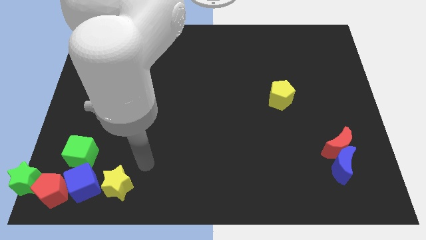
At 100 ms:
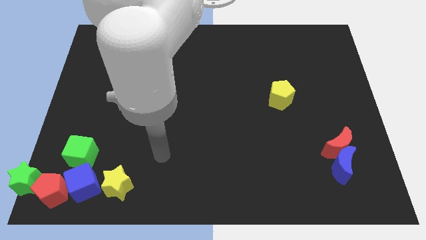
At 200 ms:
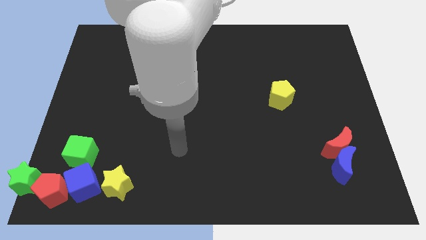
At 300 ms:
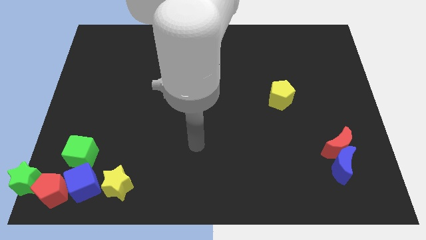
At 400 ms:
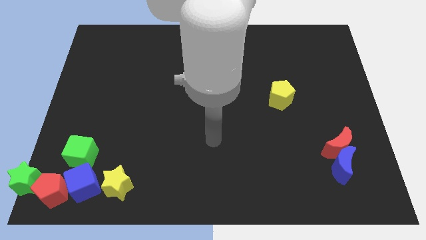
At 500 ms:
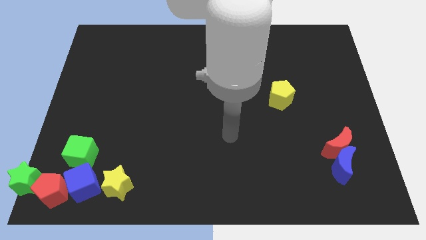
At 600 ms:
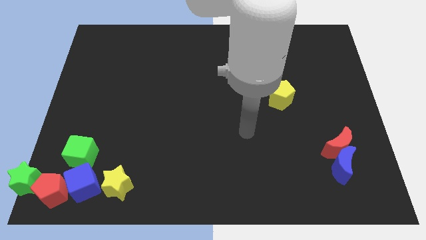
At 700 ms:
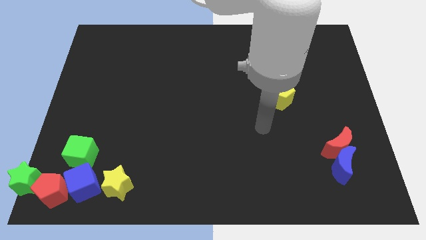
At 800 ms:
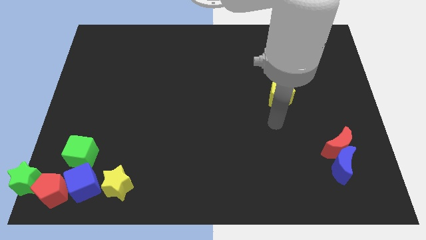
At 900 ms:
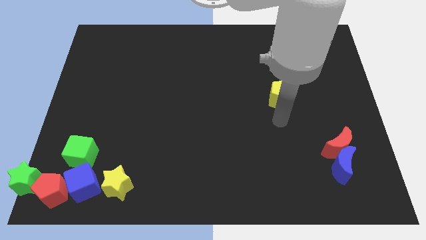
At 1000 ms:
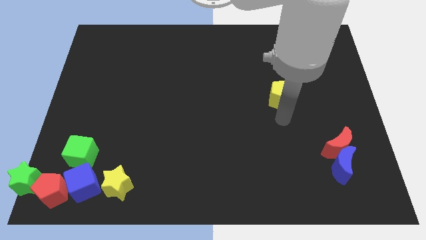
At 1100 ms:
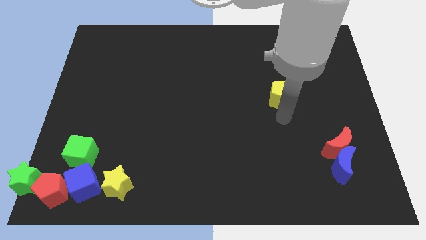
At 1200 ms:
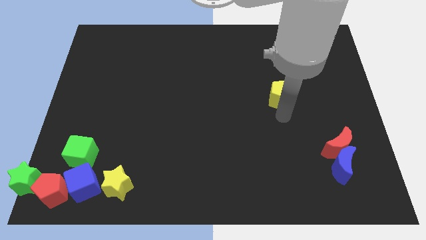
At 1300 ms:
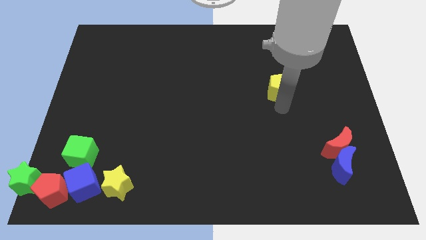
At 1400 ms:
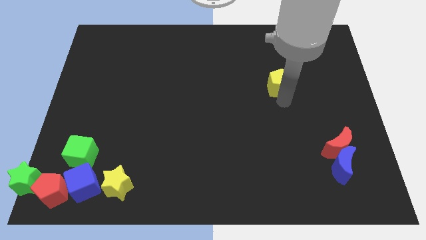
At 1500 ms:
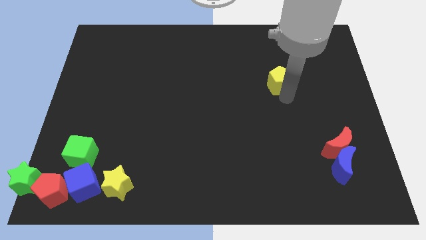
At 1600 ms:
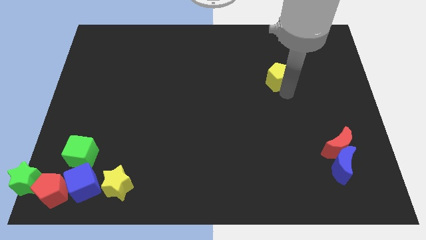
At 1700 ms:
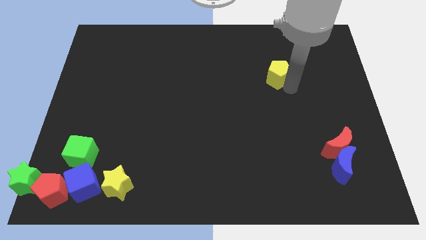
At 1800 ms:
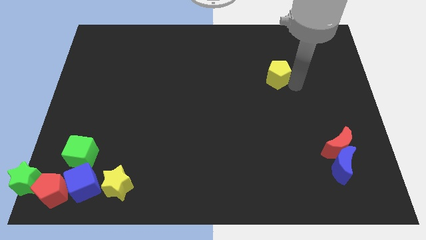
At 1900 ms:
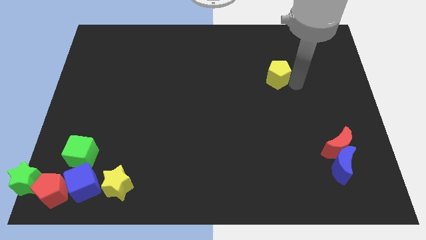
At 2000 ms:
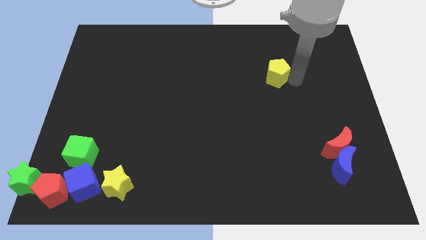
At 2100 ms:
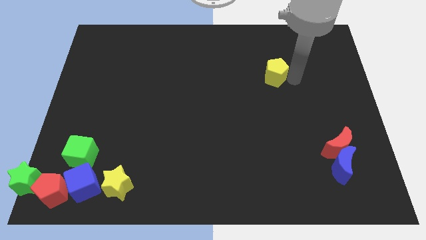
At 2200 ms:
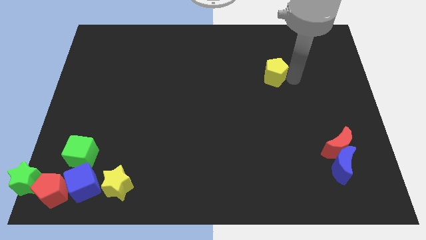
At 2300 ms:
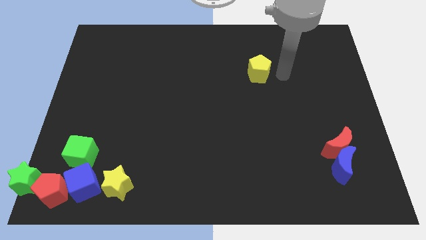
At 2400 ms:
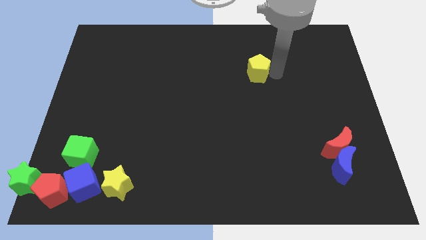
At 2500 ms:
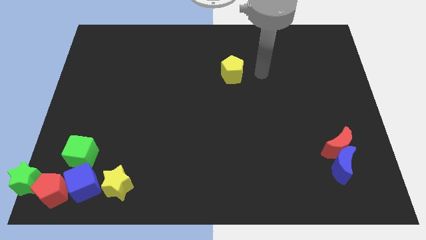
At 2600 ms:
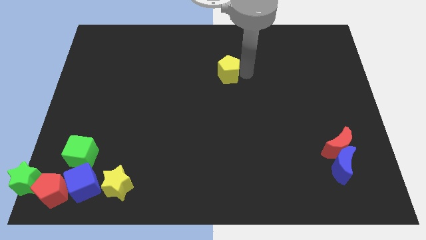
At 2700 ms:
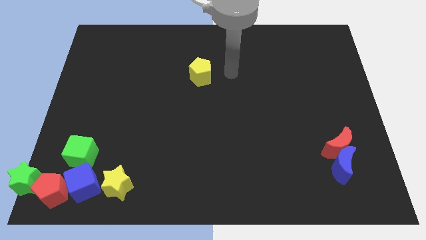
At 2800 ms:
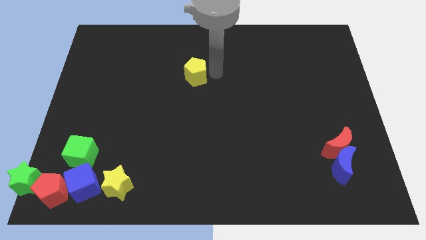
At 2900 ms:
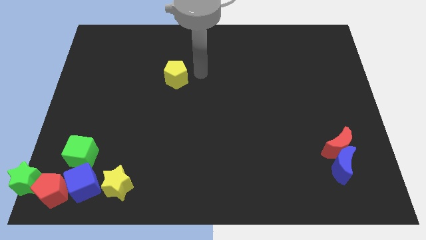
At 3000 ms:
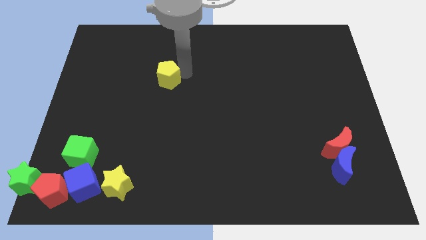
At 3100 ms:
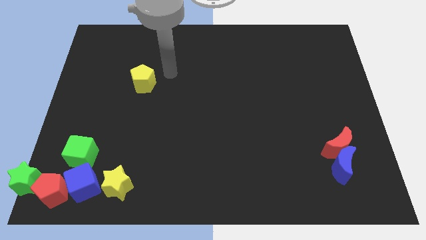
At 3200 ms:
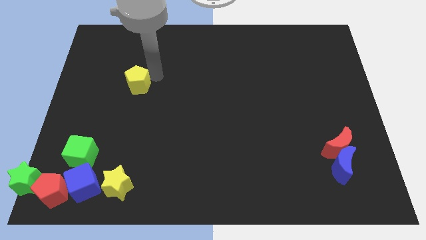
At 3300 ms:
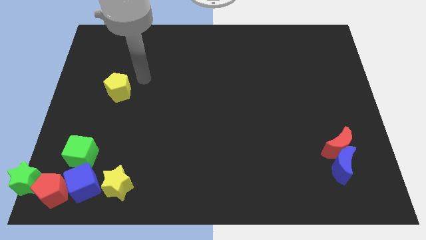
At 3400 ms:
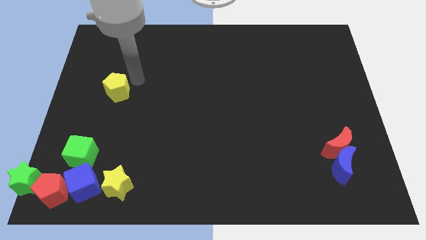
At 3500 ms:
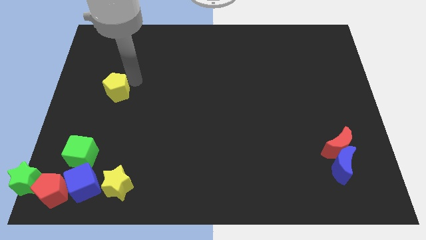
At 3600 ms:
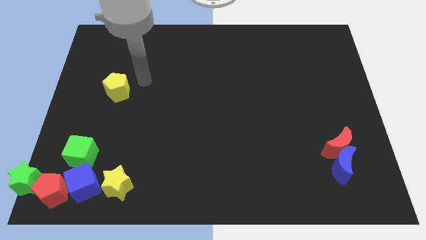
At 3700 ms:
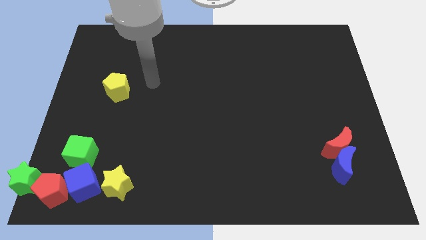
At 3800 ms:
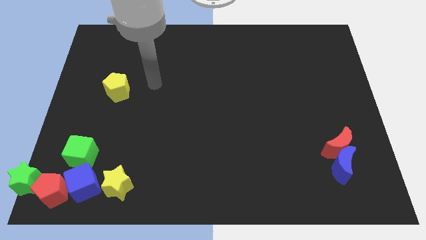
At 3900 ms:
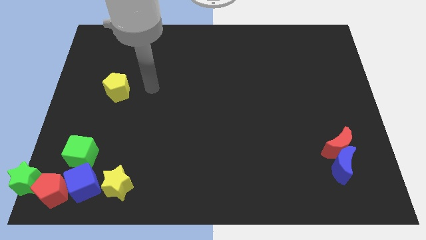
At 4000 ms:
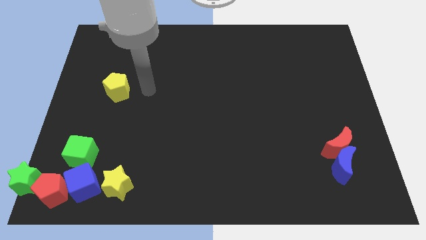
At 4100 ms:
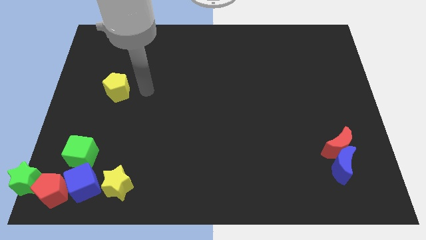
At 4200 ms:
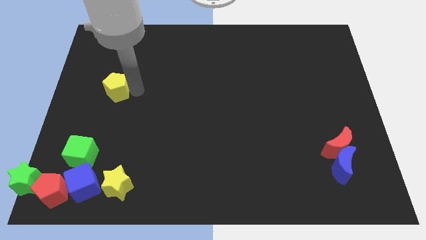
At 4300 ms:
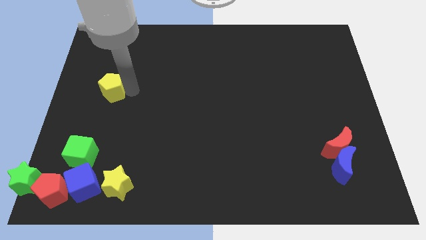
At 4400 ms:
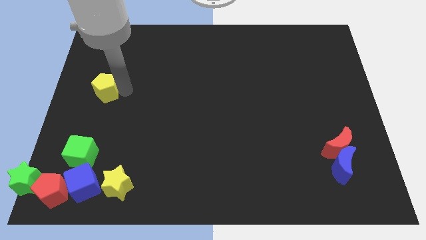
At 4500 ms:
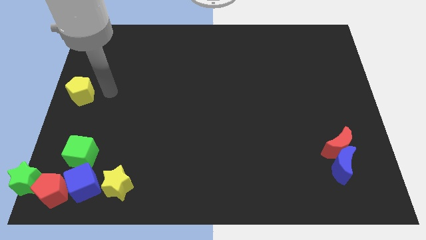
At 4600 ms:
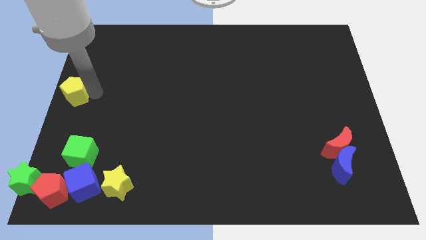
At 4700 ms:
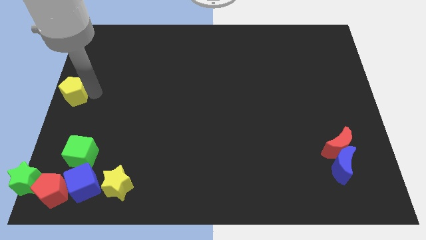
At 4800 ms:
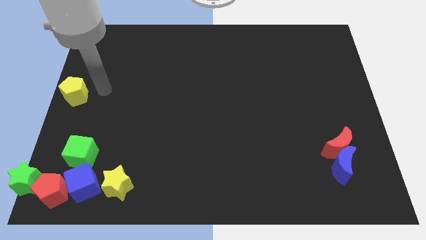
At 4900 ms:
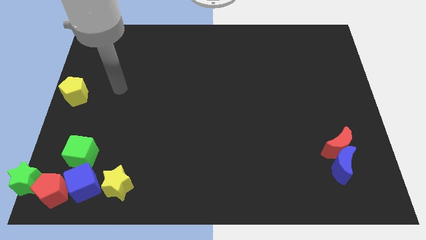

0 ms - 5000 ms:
place the yellow pentagon at the left center of the board

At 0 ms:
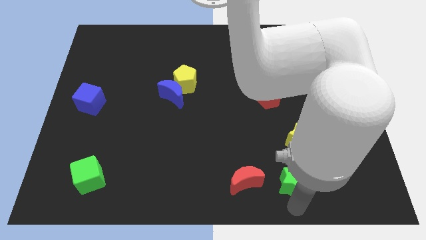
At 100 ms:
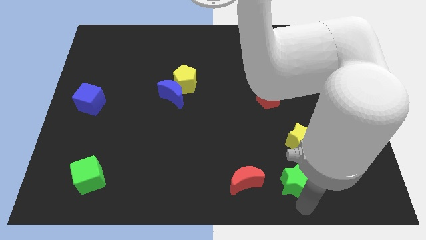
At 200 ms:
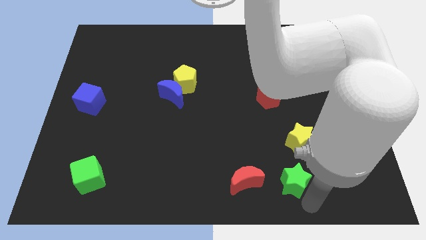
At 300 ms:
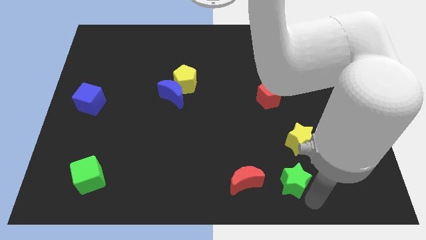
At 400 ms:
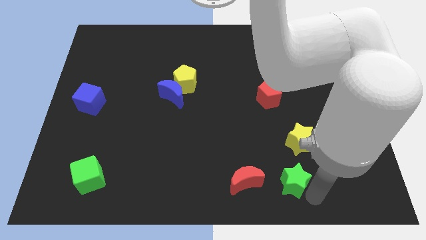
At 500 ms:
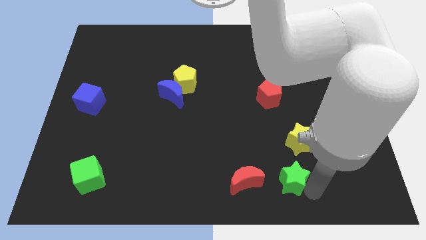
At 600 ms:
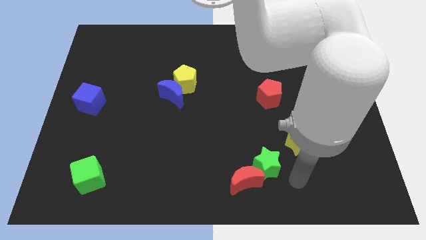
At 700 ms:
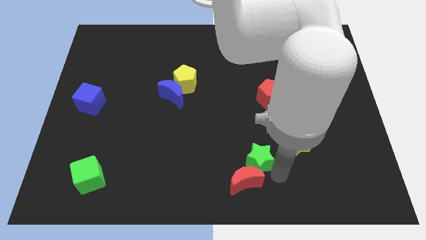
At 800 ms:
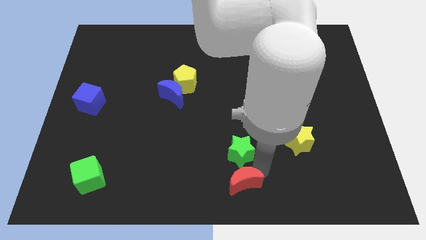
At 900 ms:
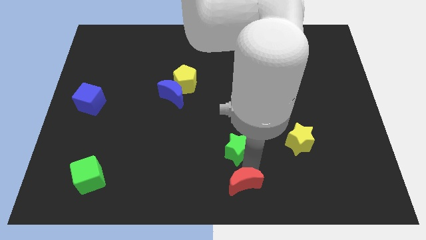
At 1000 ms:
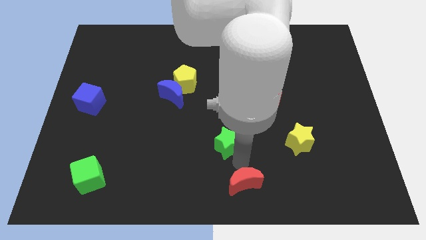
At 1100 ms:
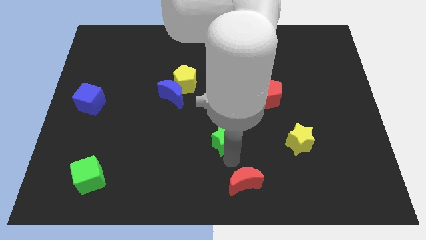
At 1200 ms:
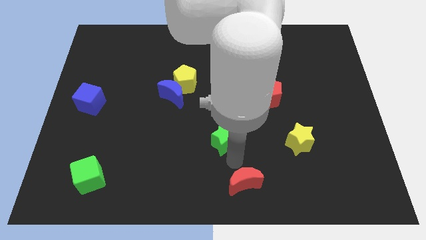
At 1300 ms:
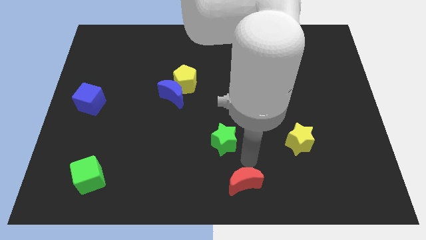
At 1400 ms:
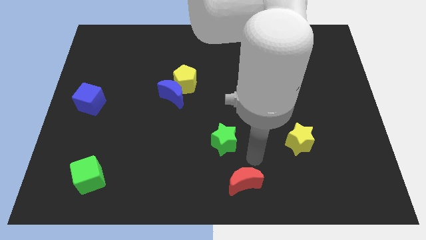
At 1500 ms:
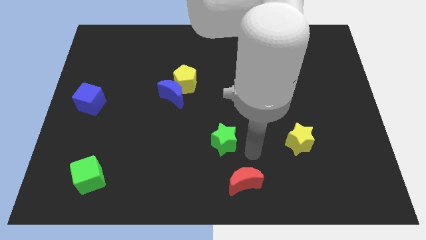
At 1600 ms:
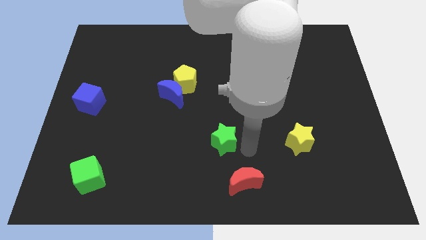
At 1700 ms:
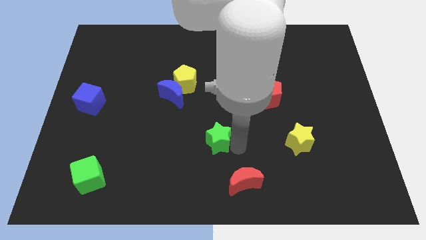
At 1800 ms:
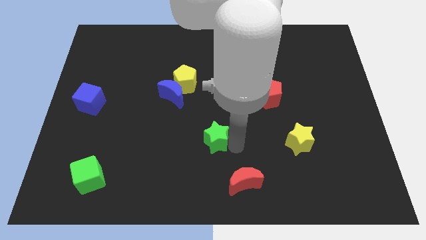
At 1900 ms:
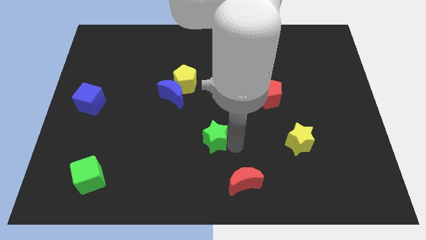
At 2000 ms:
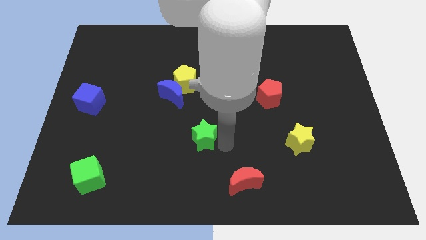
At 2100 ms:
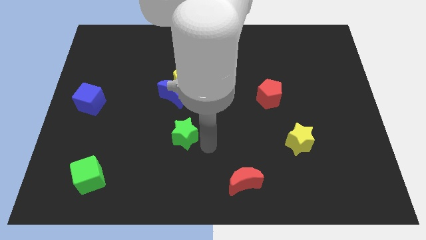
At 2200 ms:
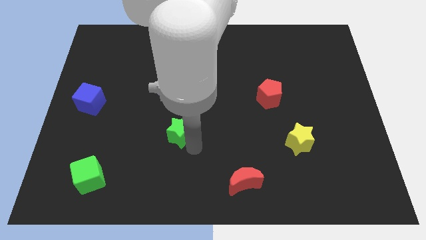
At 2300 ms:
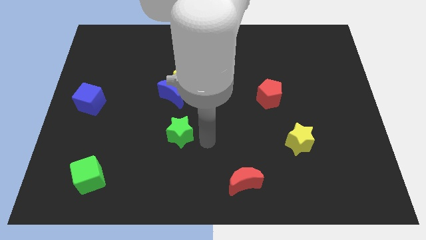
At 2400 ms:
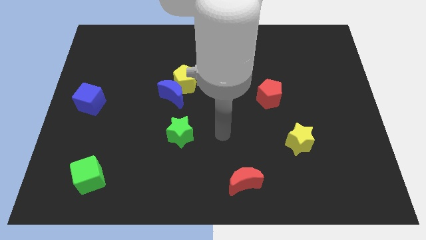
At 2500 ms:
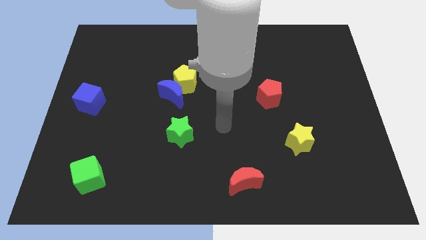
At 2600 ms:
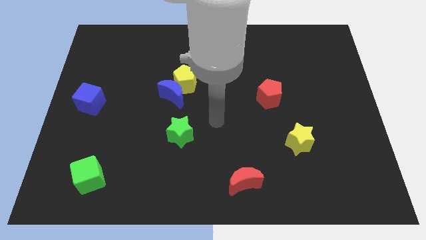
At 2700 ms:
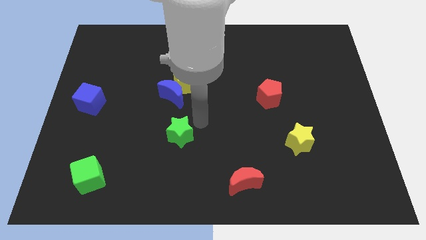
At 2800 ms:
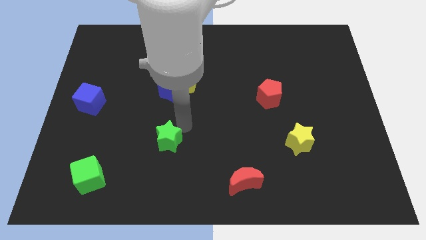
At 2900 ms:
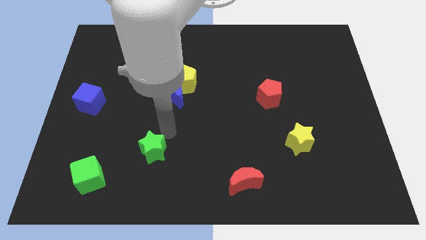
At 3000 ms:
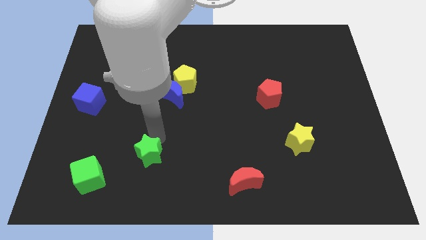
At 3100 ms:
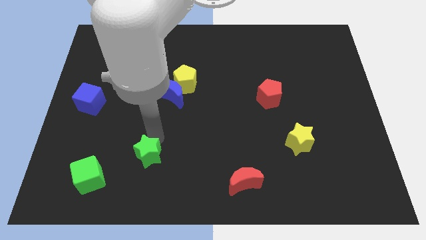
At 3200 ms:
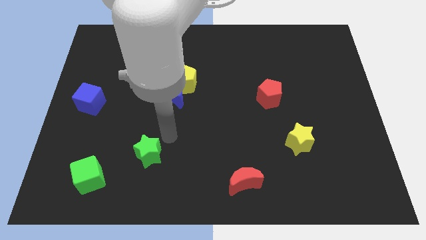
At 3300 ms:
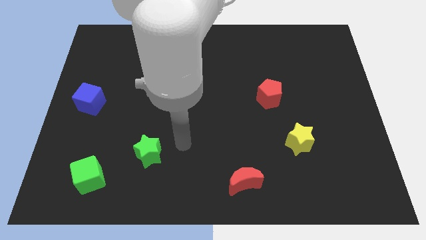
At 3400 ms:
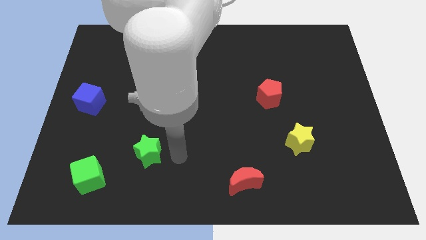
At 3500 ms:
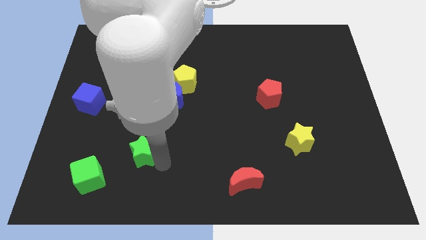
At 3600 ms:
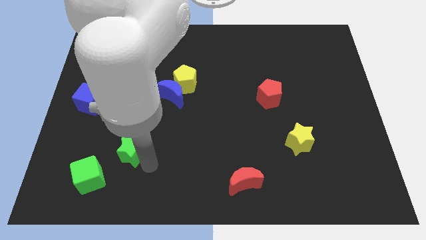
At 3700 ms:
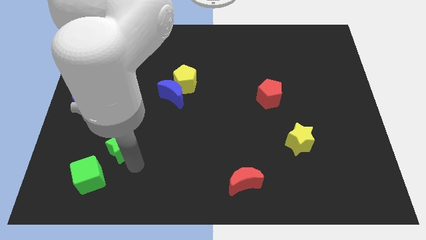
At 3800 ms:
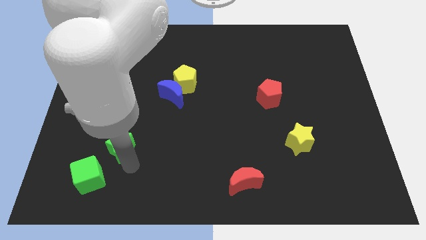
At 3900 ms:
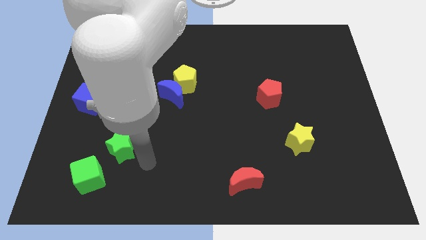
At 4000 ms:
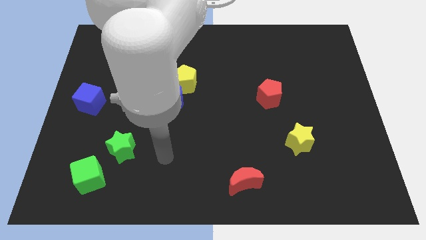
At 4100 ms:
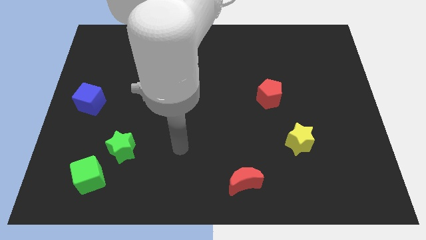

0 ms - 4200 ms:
place the green star at the top right of the green cube
